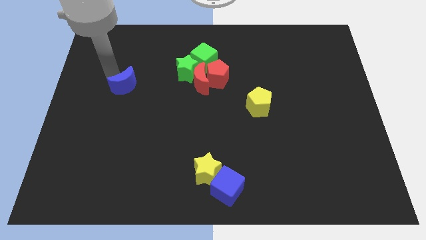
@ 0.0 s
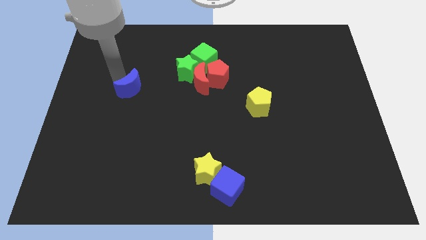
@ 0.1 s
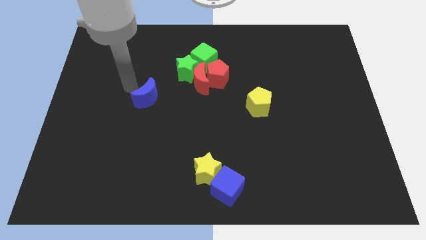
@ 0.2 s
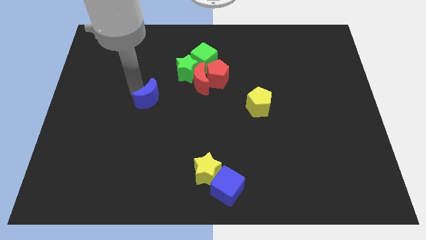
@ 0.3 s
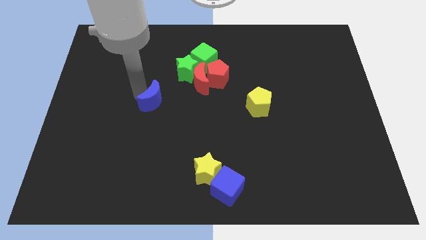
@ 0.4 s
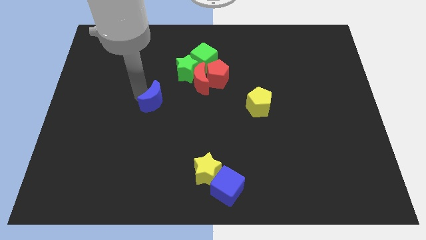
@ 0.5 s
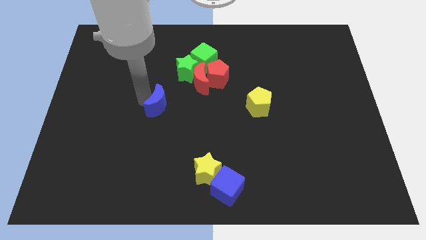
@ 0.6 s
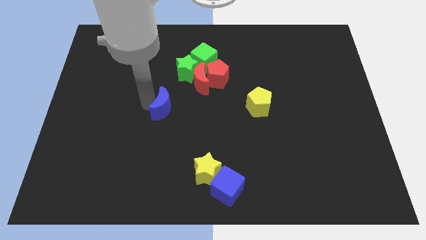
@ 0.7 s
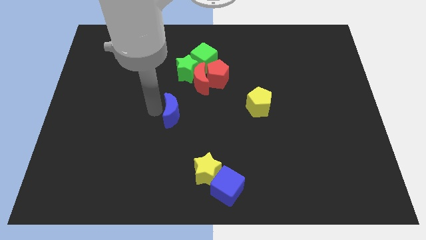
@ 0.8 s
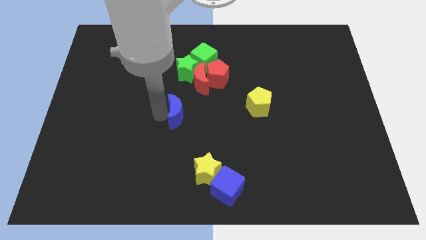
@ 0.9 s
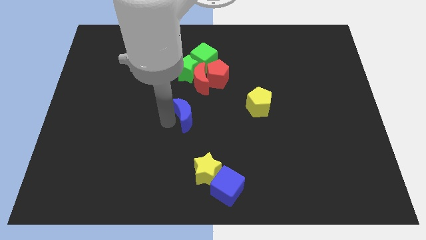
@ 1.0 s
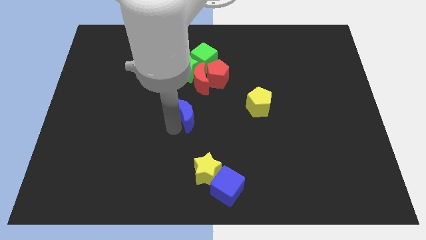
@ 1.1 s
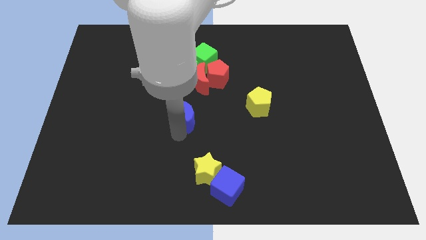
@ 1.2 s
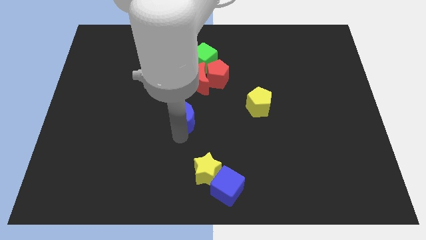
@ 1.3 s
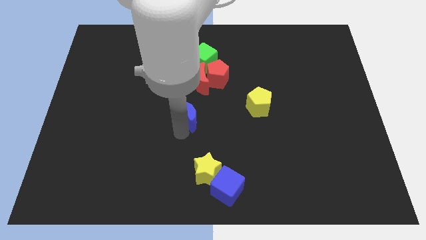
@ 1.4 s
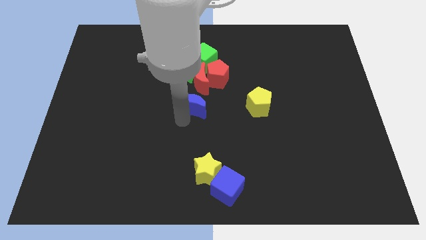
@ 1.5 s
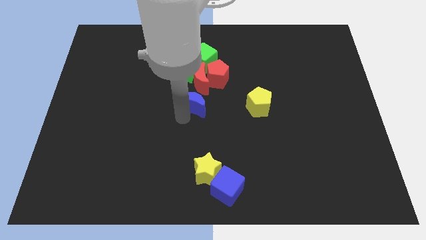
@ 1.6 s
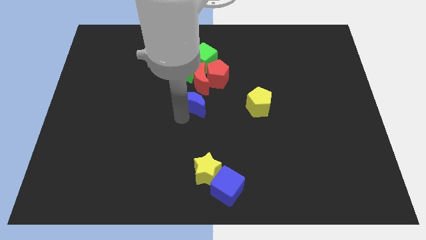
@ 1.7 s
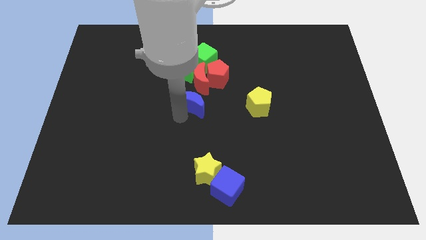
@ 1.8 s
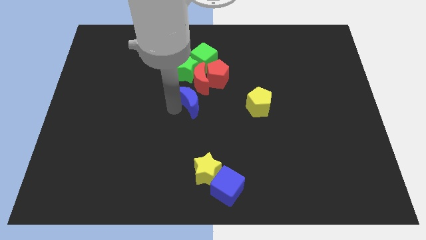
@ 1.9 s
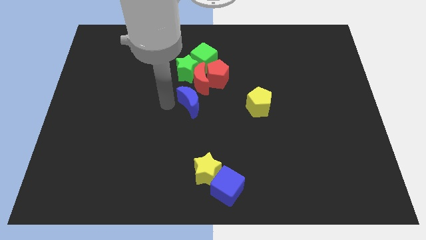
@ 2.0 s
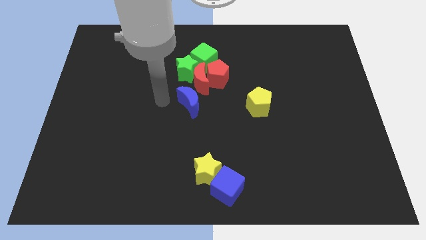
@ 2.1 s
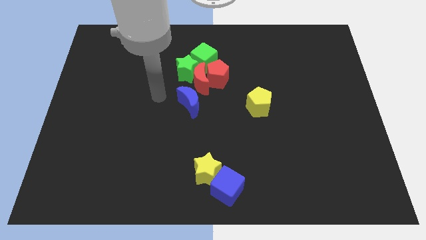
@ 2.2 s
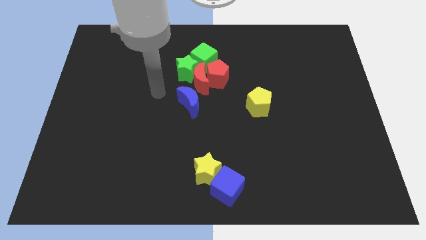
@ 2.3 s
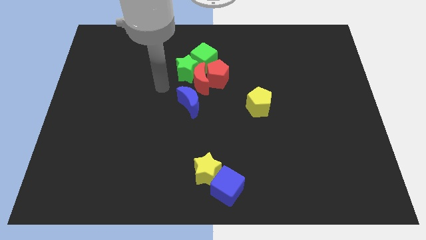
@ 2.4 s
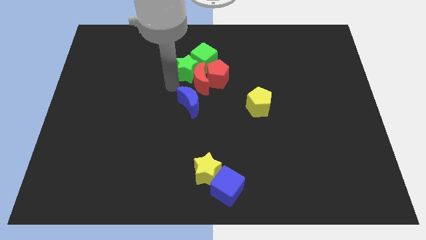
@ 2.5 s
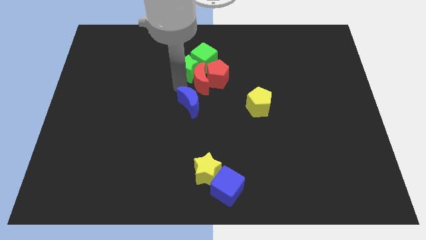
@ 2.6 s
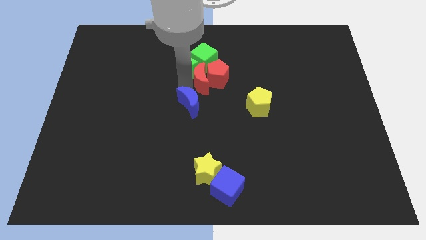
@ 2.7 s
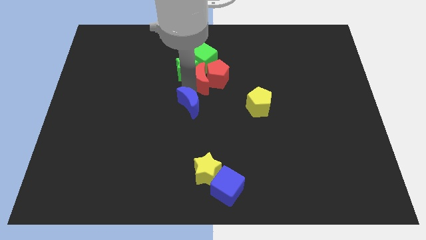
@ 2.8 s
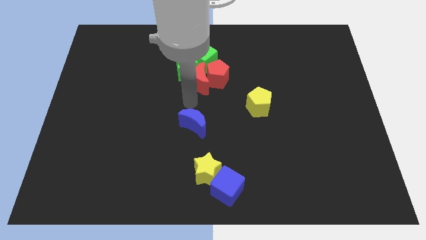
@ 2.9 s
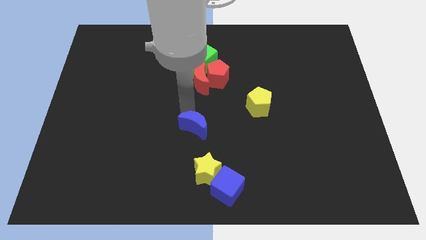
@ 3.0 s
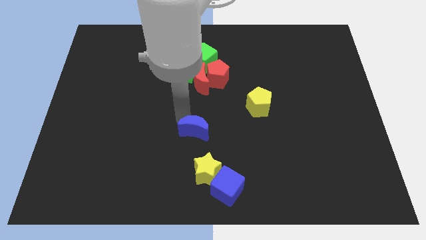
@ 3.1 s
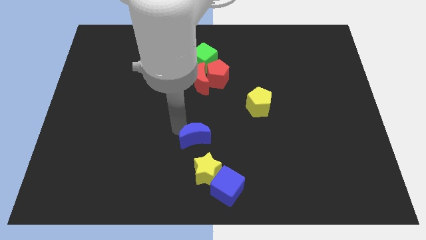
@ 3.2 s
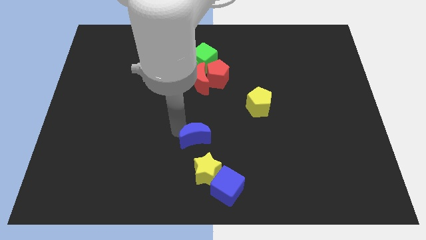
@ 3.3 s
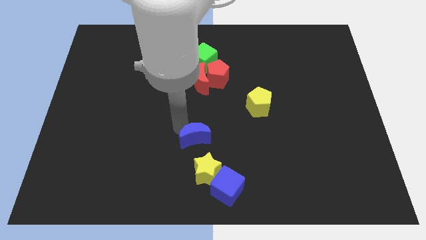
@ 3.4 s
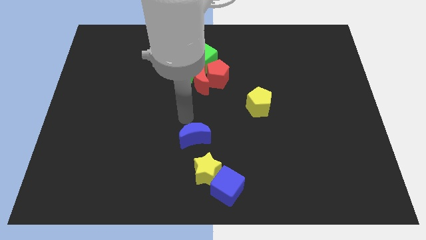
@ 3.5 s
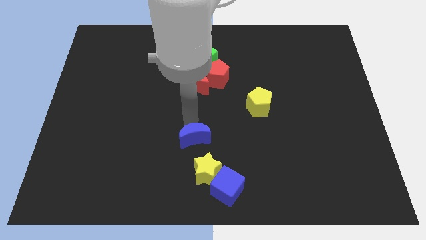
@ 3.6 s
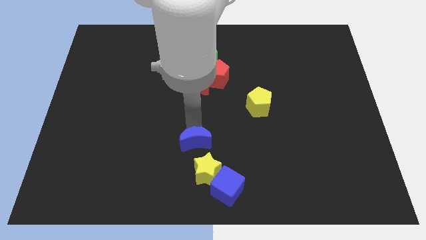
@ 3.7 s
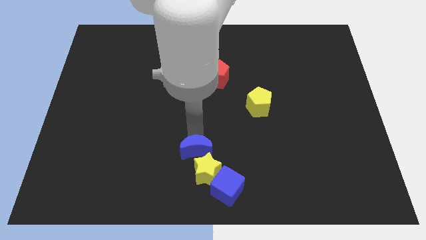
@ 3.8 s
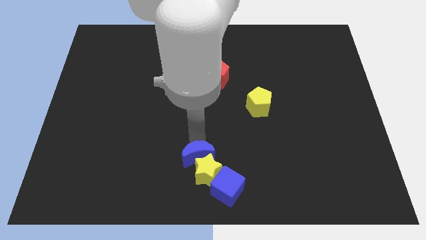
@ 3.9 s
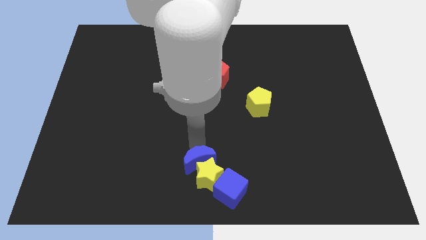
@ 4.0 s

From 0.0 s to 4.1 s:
place the blue crescent near the yellow star

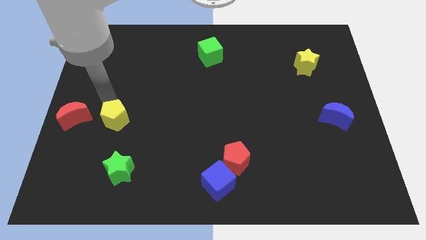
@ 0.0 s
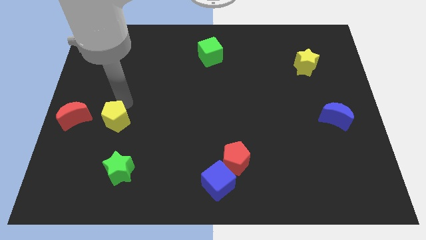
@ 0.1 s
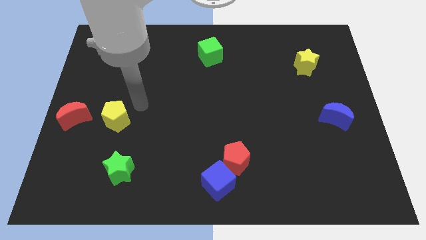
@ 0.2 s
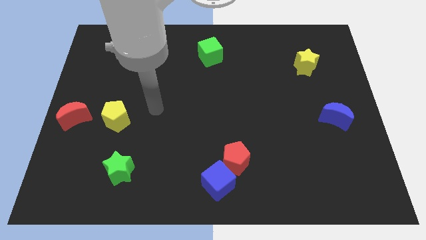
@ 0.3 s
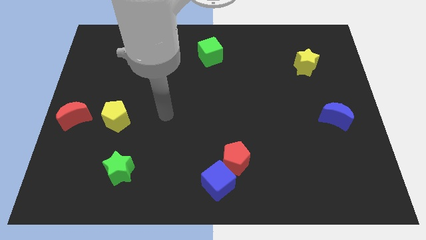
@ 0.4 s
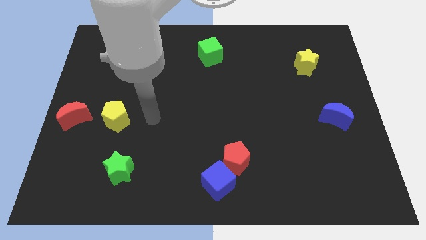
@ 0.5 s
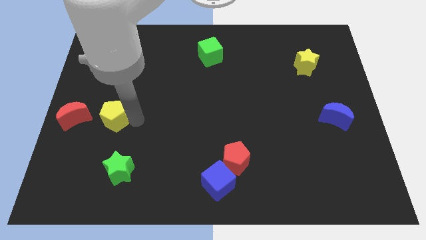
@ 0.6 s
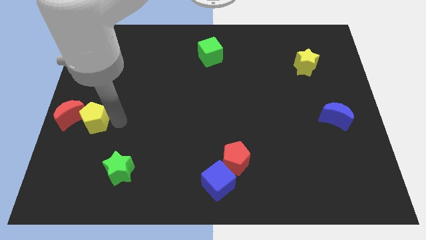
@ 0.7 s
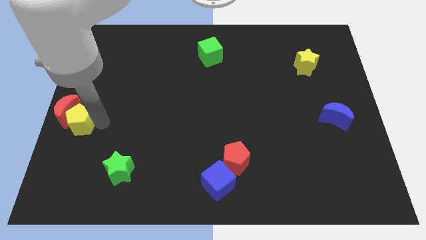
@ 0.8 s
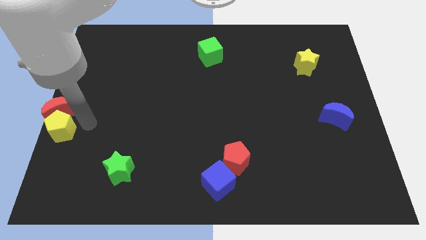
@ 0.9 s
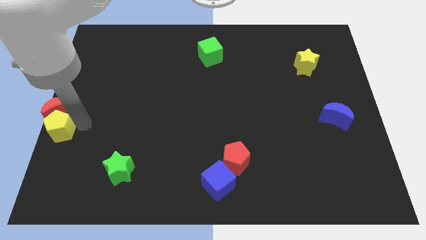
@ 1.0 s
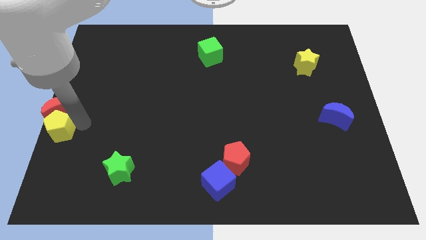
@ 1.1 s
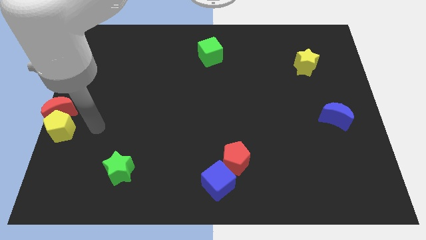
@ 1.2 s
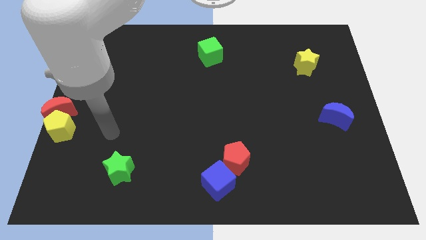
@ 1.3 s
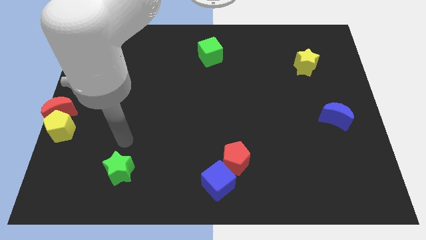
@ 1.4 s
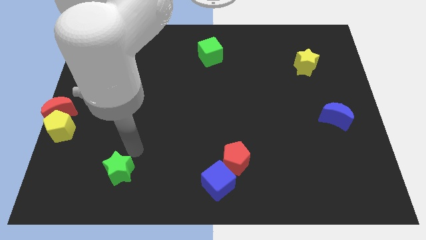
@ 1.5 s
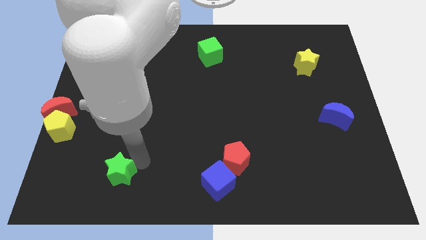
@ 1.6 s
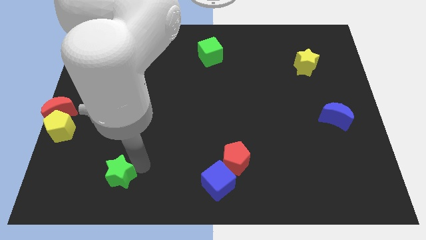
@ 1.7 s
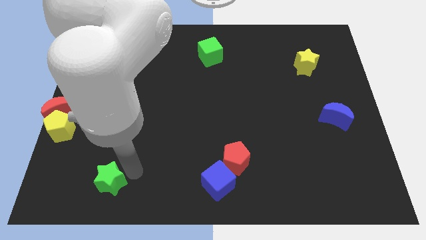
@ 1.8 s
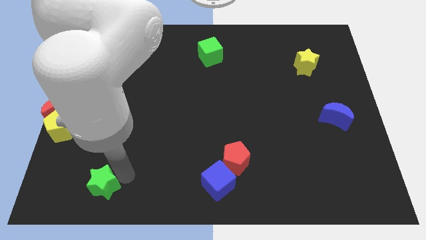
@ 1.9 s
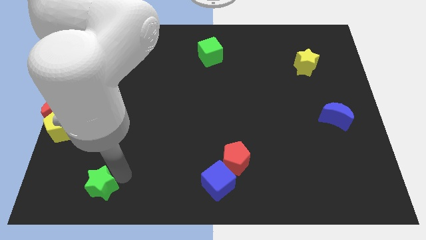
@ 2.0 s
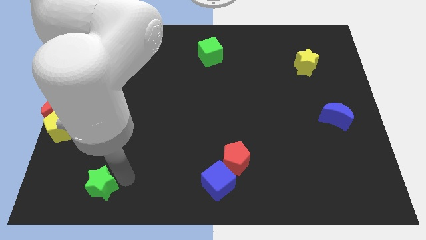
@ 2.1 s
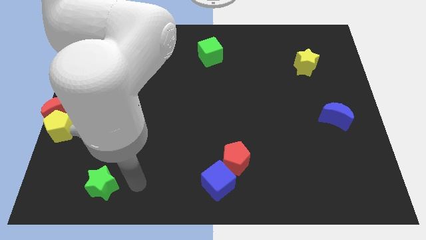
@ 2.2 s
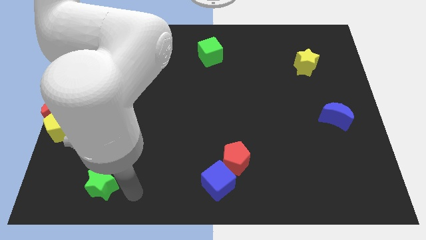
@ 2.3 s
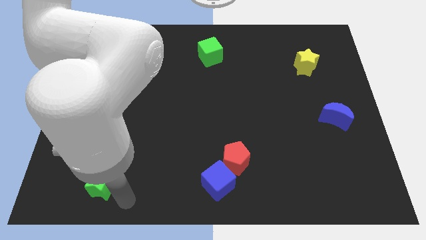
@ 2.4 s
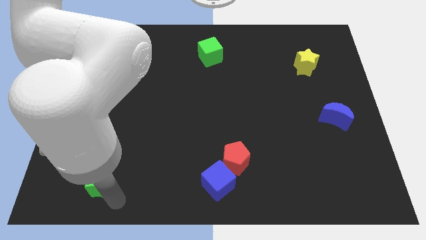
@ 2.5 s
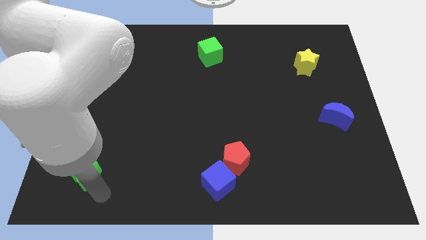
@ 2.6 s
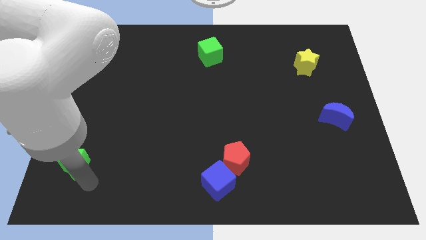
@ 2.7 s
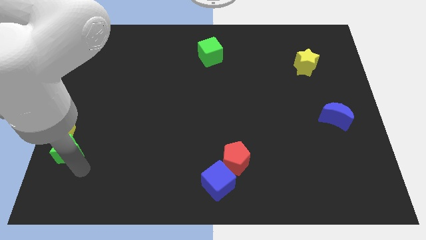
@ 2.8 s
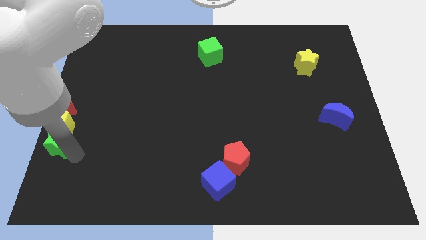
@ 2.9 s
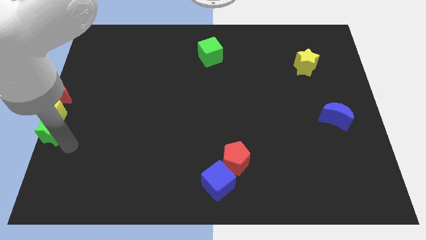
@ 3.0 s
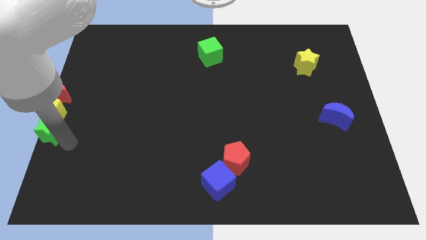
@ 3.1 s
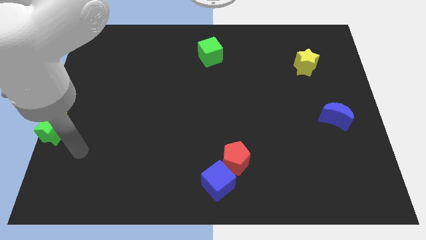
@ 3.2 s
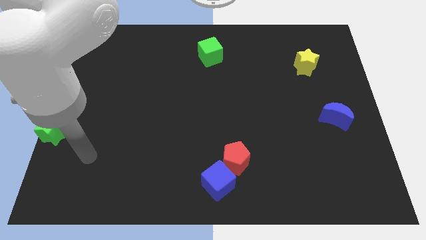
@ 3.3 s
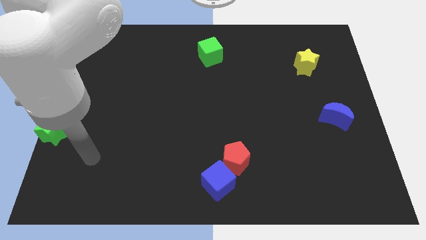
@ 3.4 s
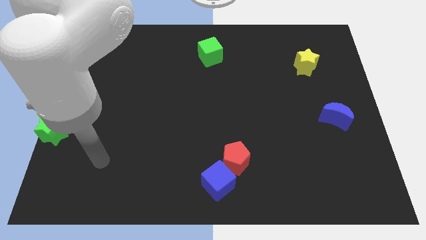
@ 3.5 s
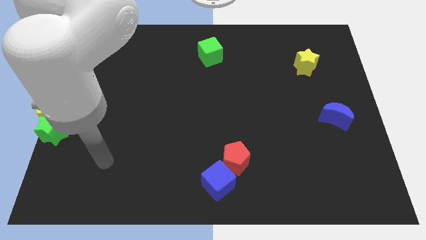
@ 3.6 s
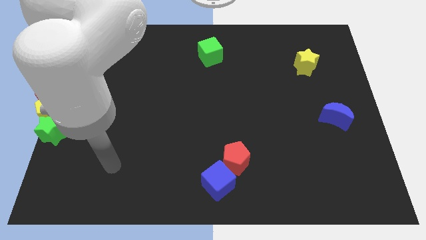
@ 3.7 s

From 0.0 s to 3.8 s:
move the yellow pentagon and green star into the red moon

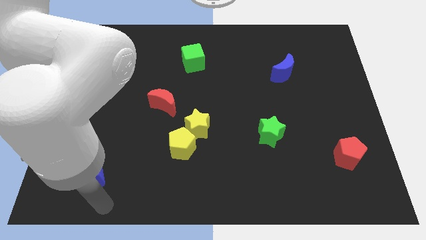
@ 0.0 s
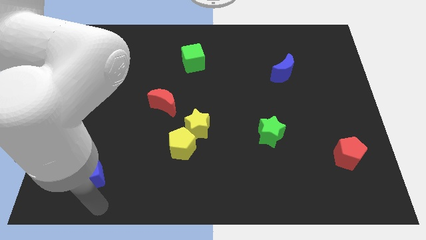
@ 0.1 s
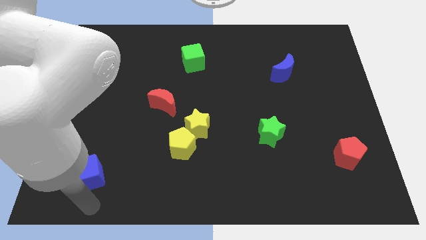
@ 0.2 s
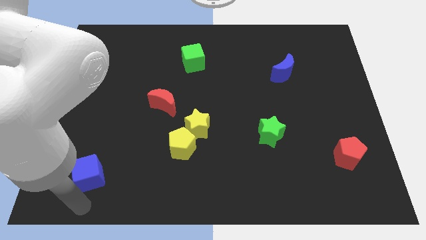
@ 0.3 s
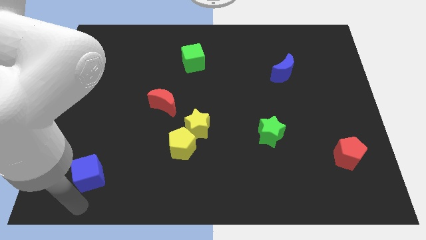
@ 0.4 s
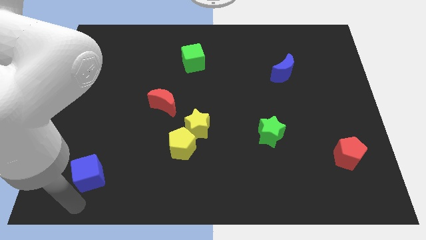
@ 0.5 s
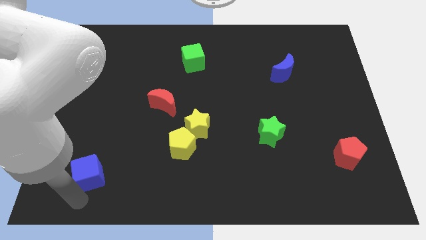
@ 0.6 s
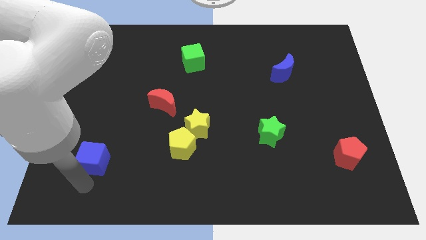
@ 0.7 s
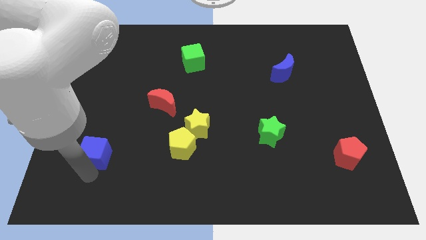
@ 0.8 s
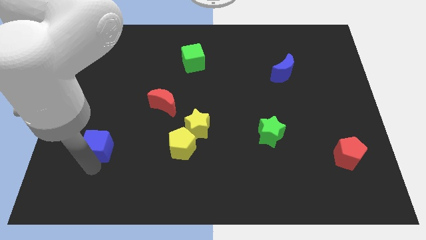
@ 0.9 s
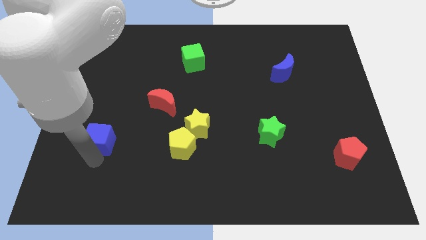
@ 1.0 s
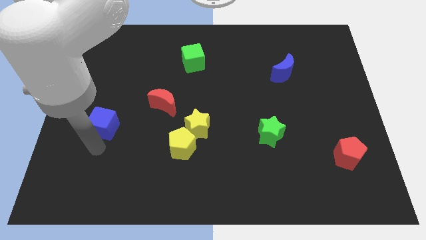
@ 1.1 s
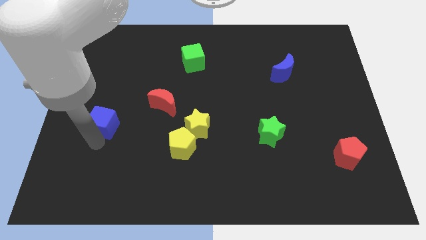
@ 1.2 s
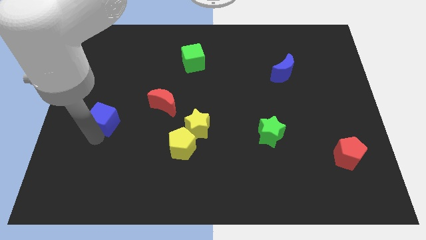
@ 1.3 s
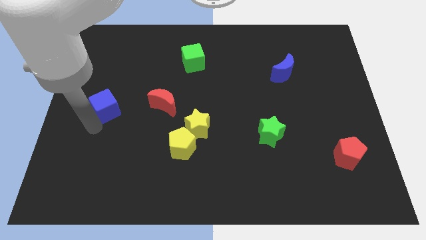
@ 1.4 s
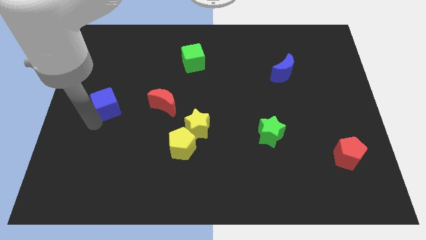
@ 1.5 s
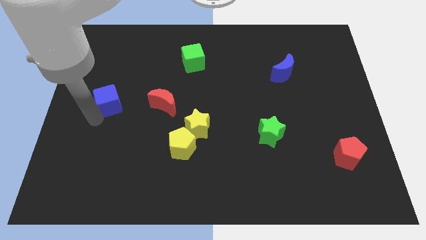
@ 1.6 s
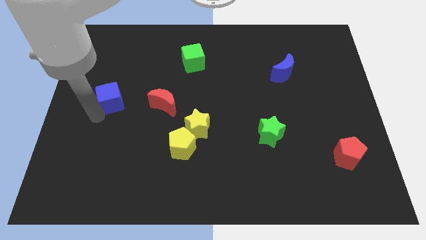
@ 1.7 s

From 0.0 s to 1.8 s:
push the blue cube to the up side of the board
